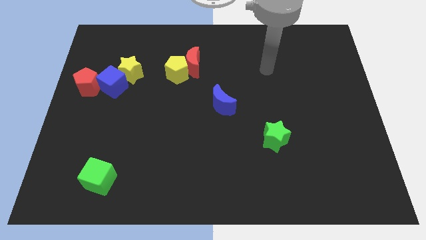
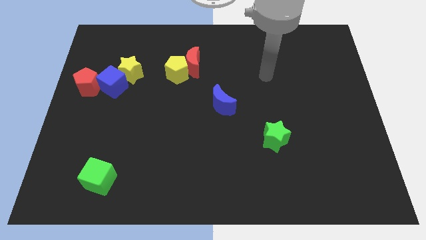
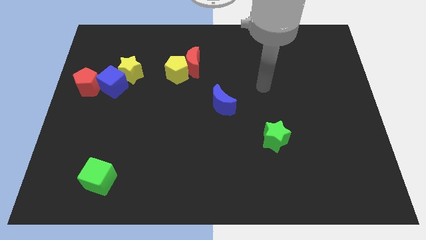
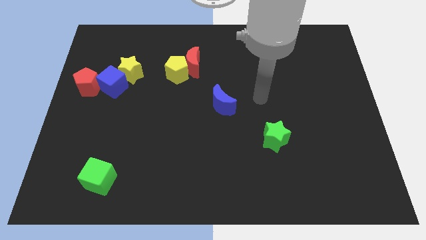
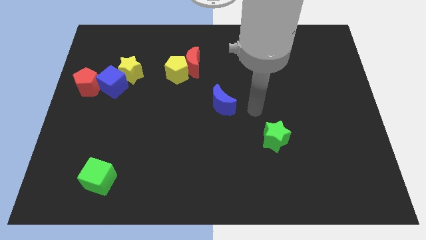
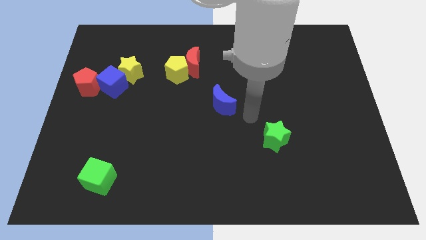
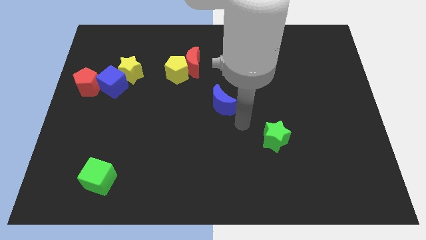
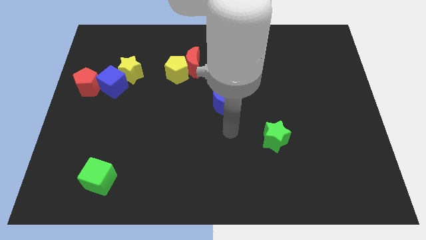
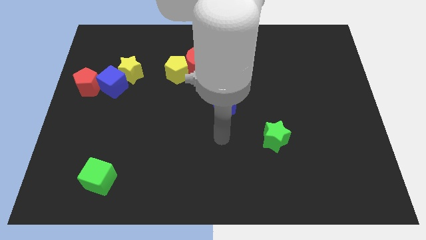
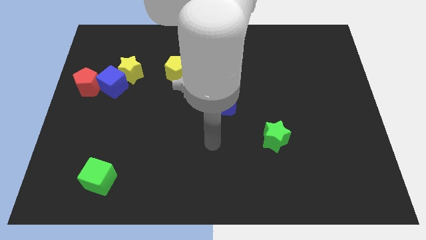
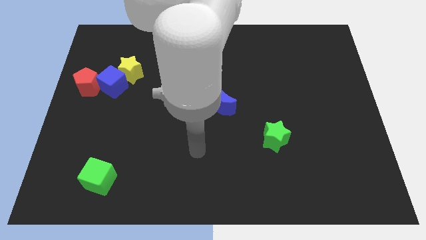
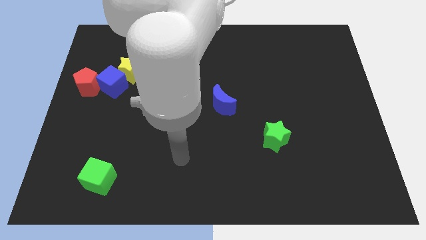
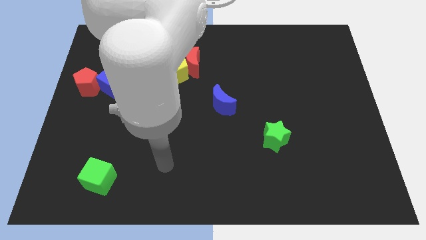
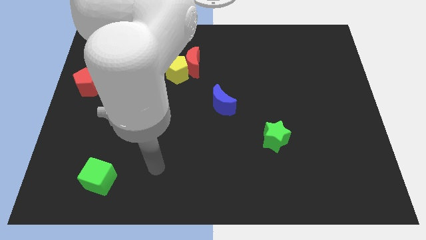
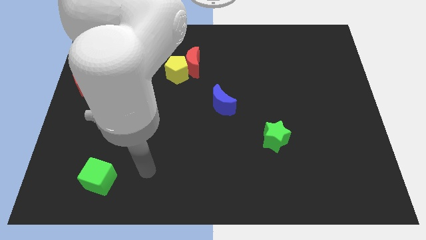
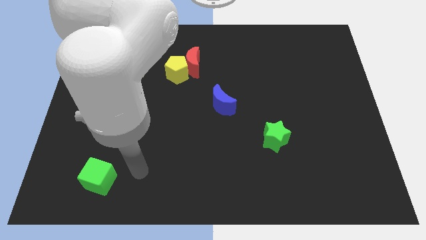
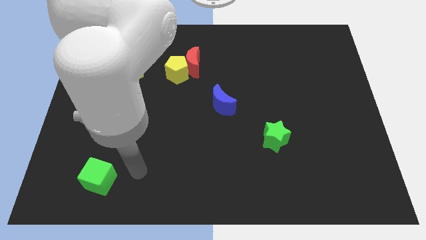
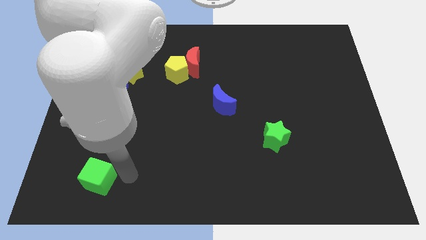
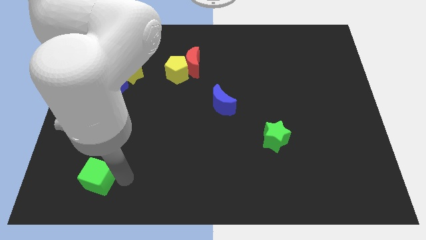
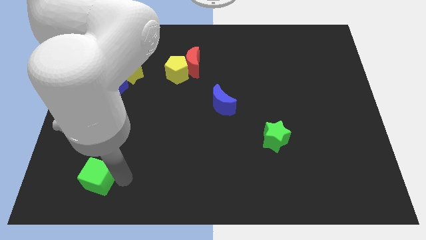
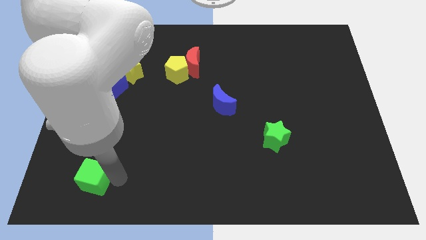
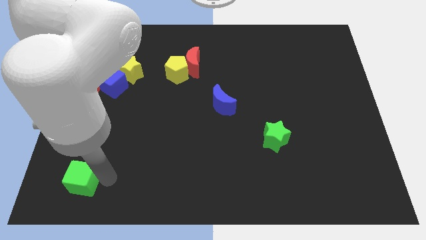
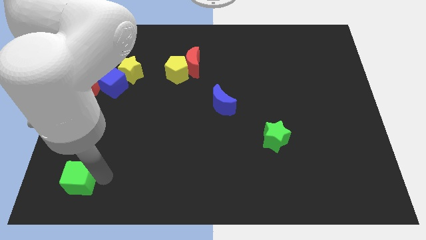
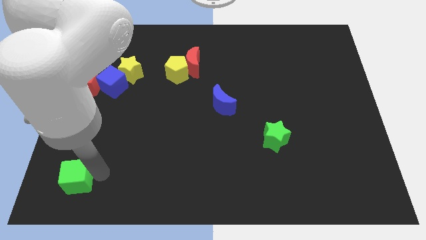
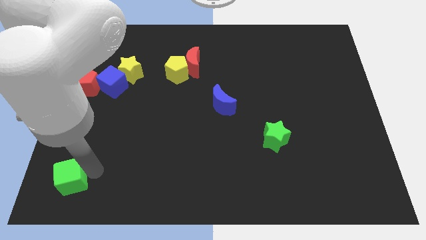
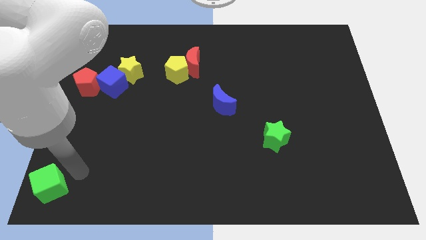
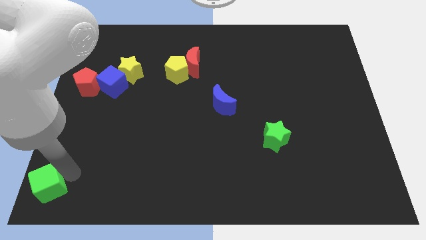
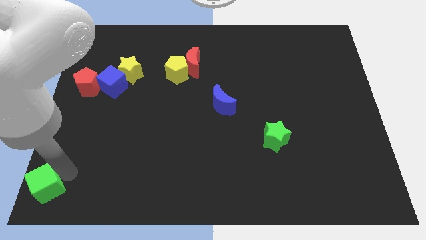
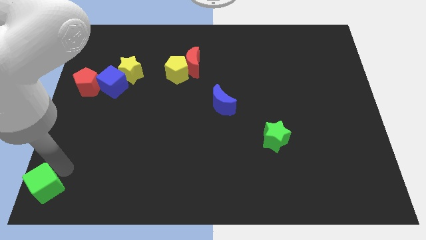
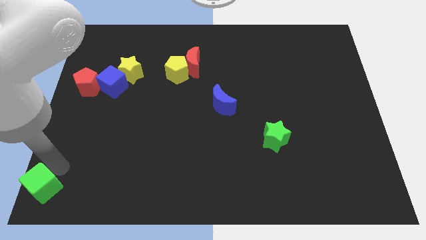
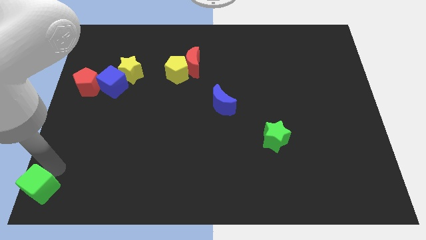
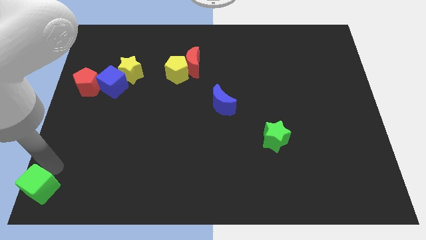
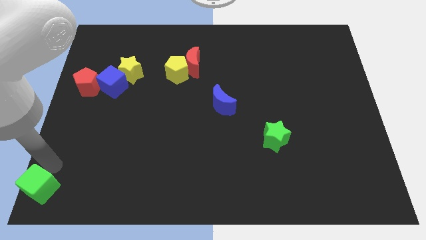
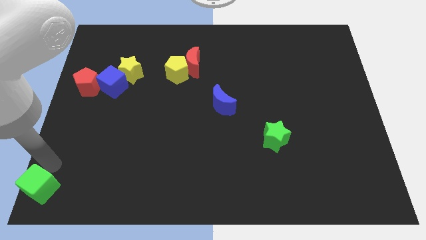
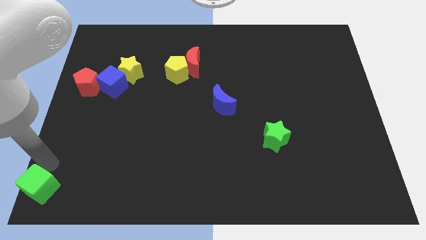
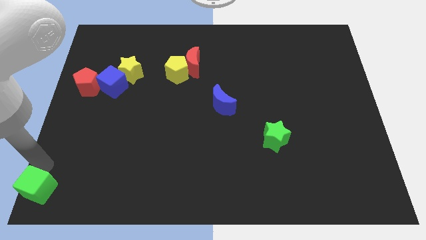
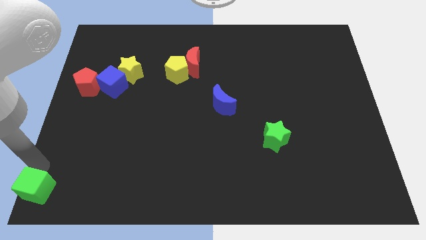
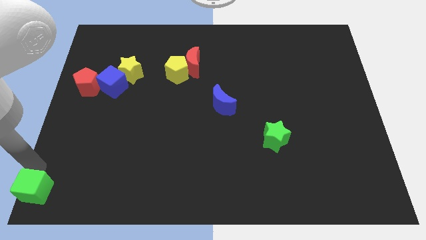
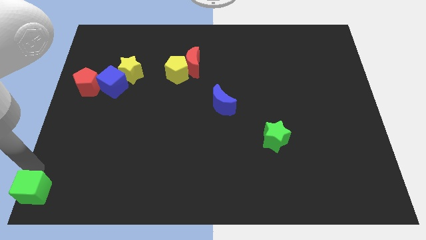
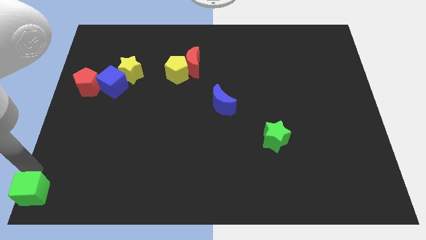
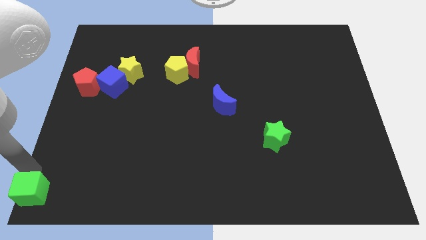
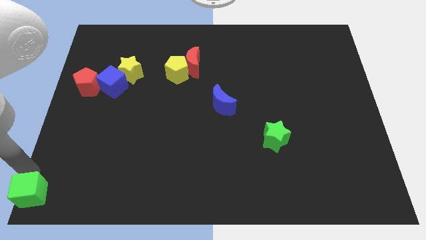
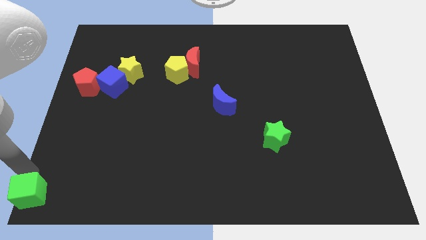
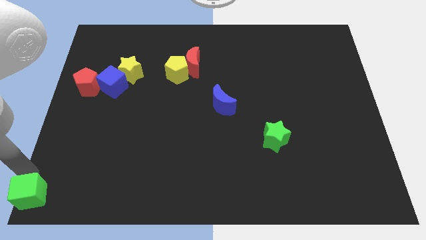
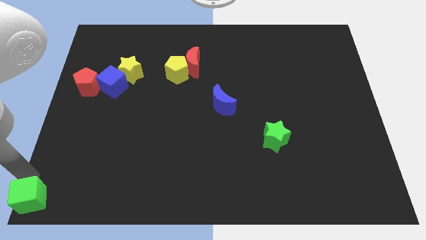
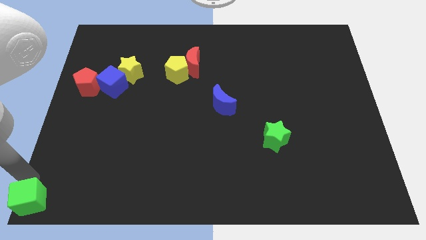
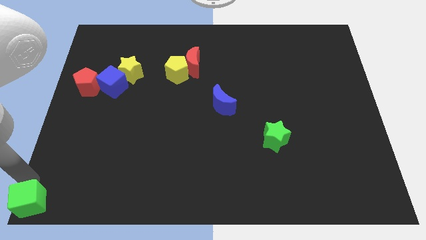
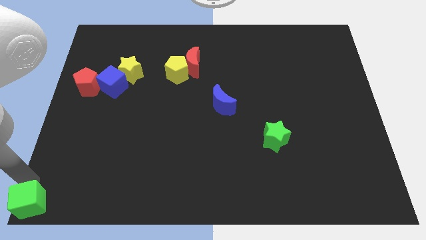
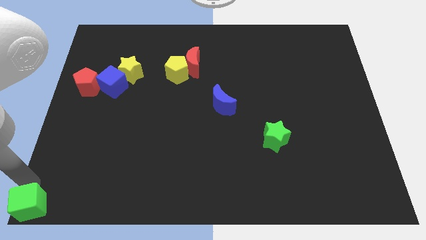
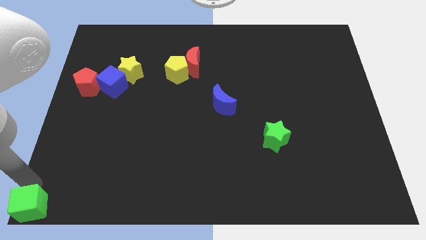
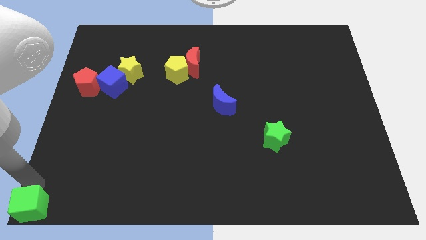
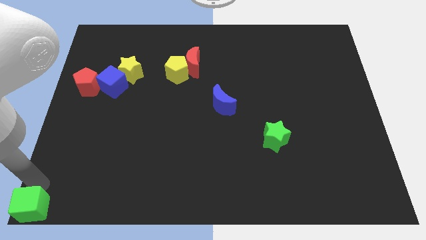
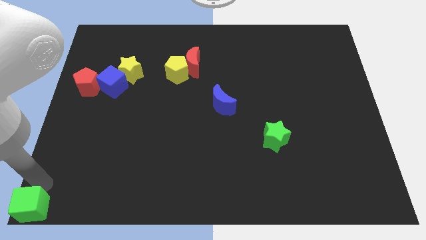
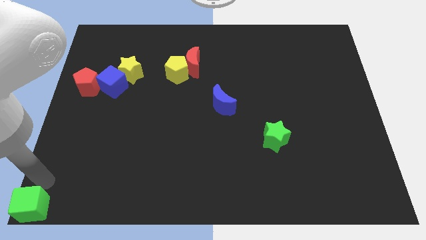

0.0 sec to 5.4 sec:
place the green cube at the bottom left corner of the board

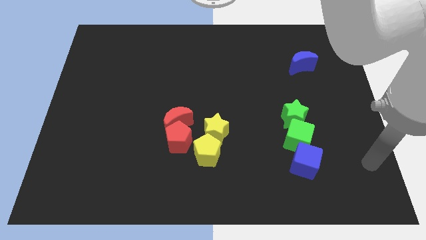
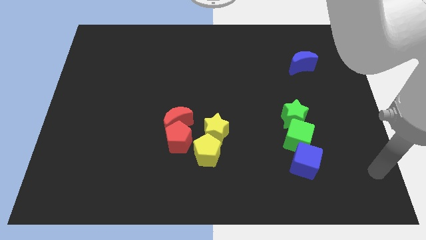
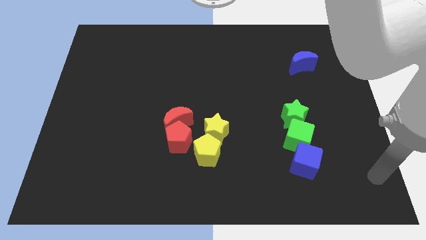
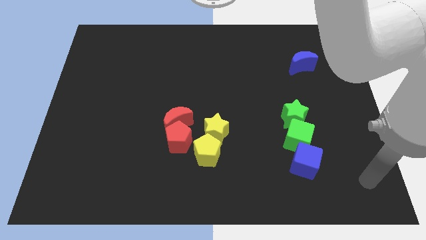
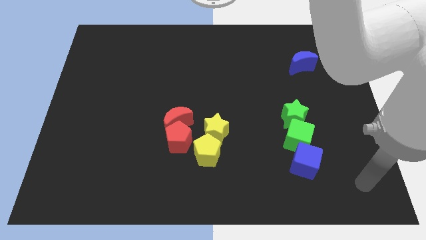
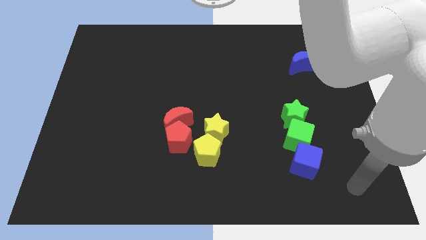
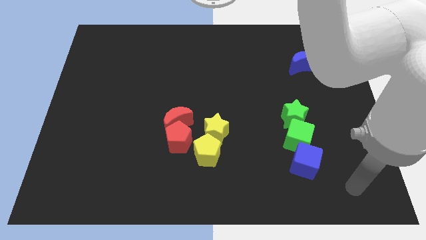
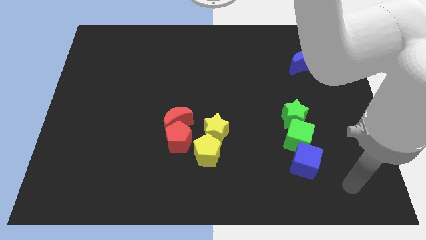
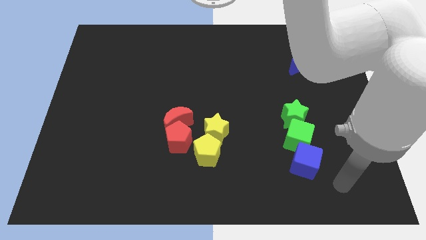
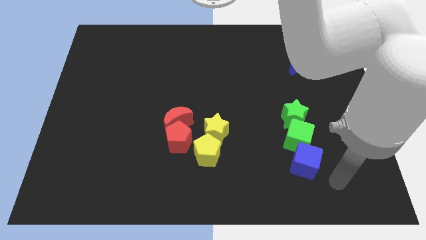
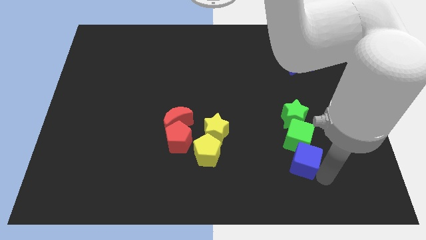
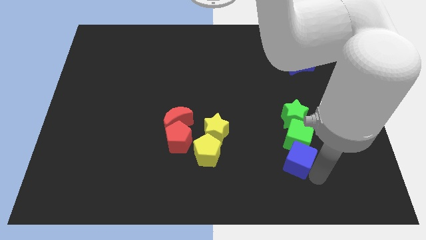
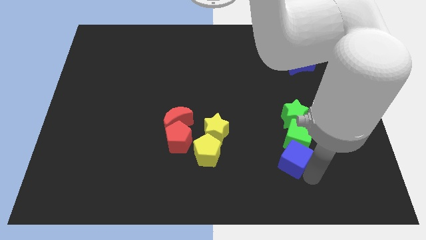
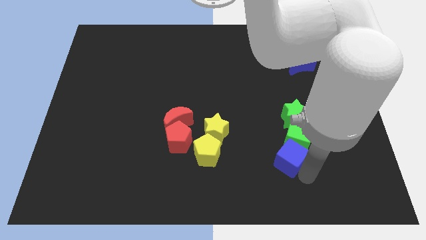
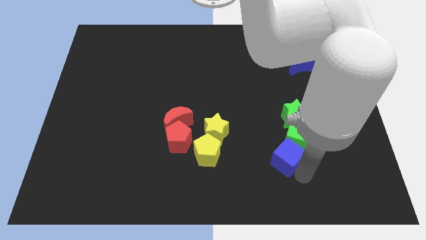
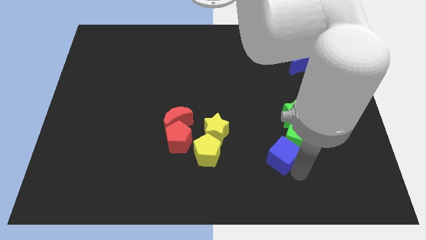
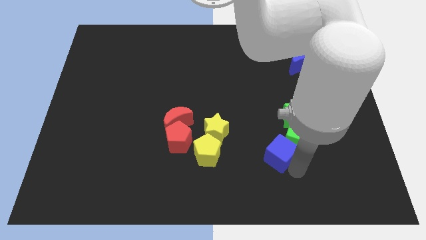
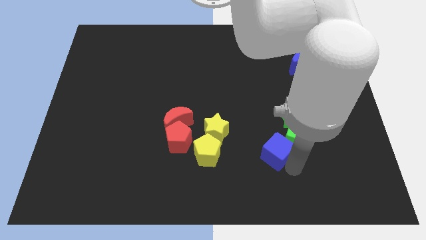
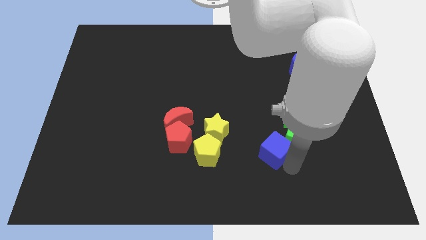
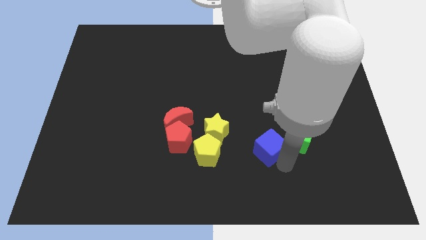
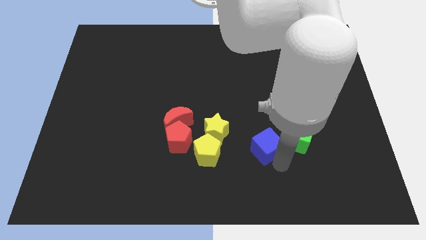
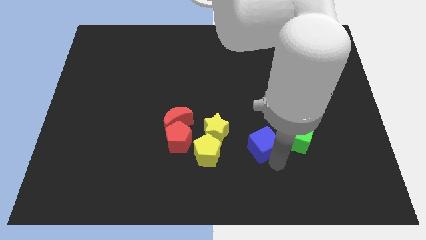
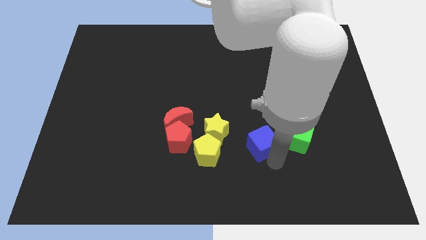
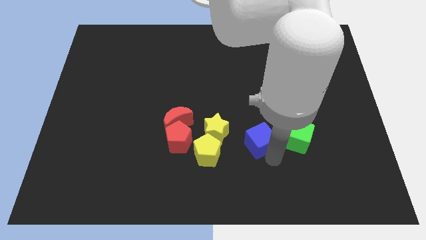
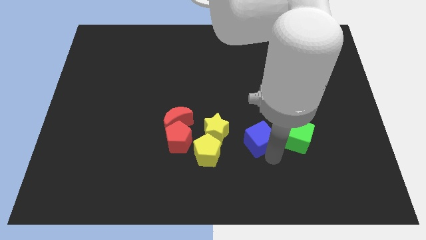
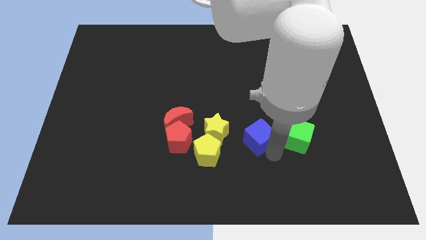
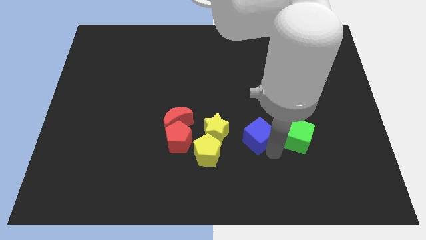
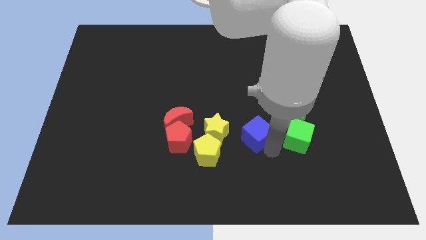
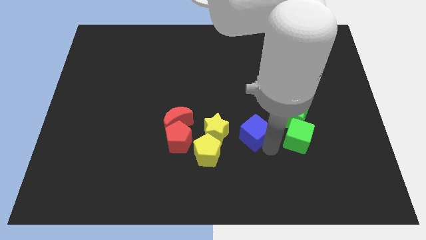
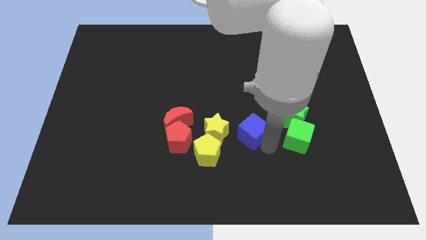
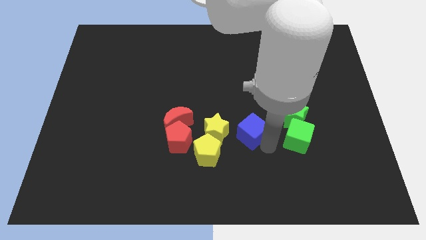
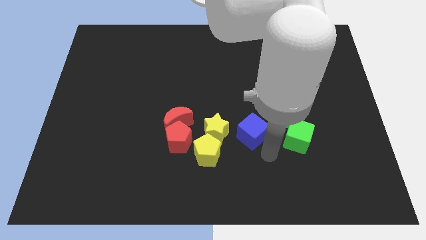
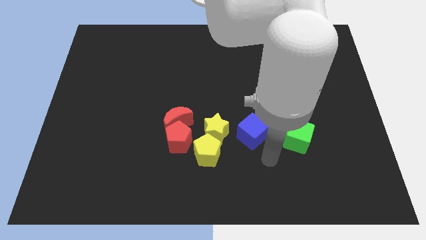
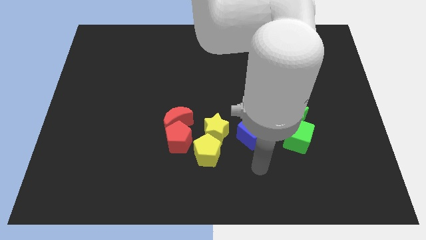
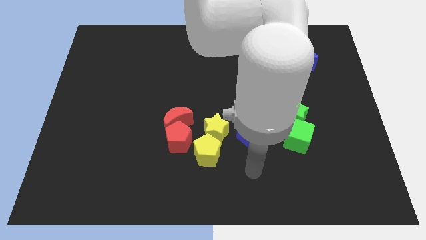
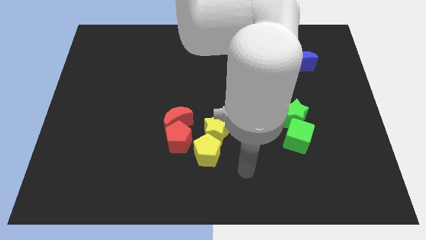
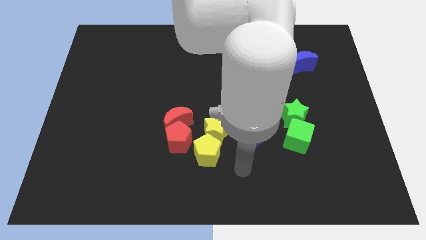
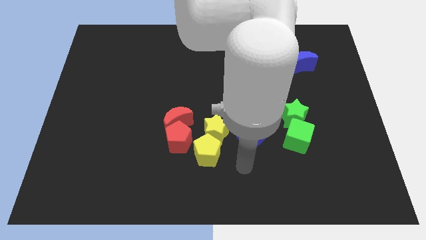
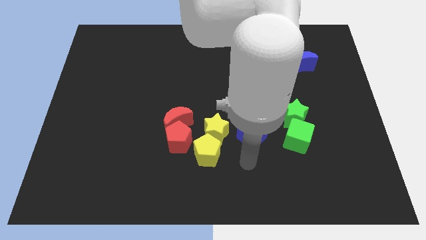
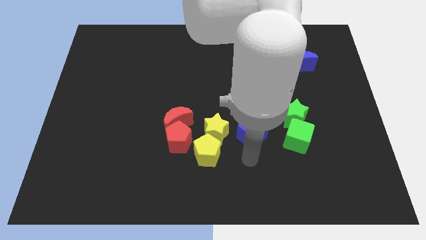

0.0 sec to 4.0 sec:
place the blue cube right to the yellow star
